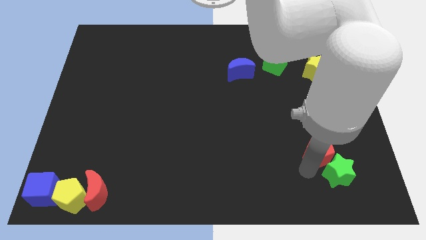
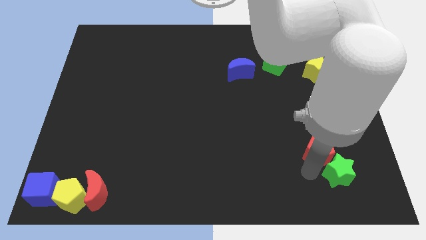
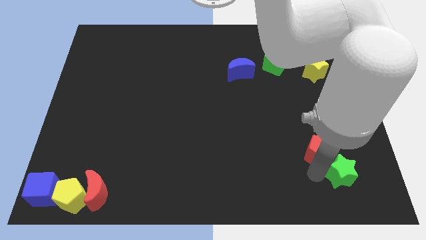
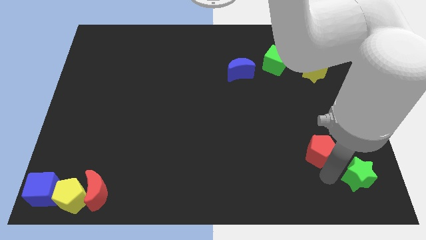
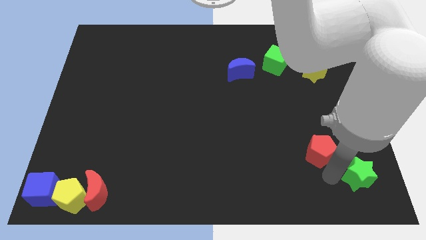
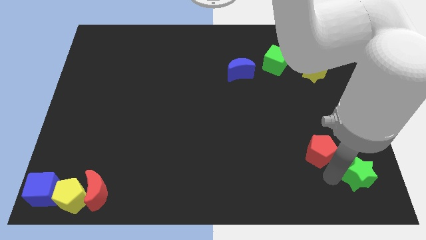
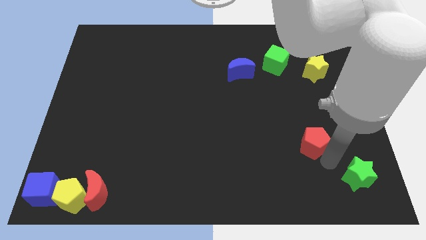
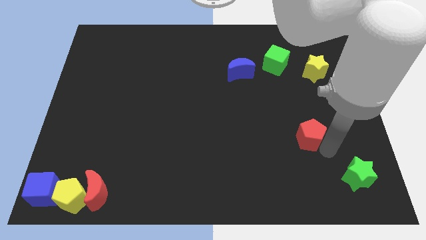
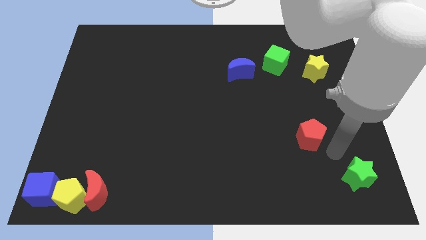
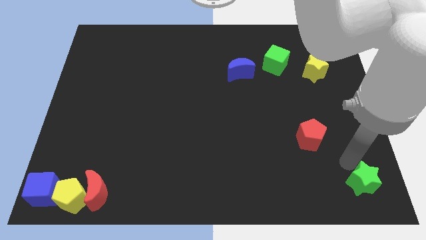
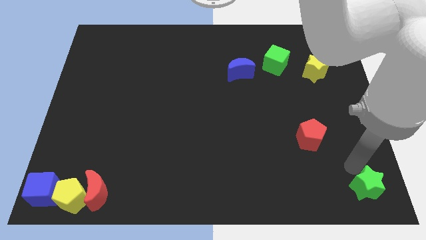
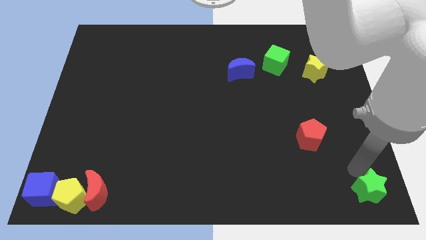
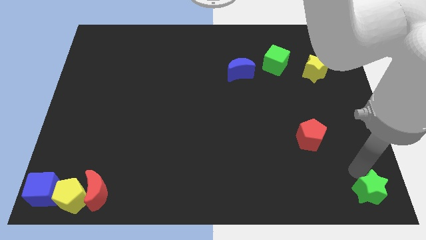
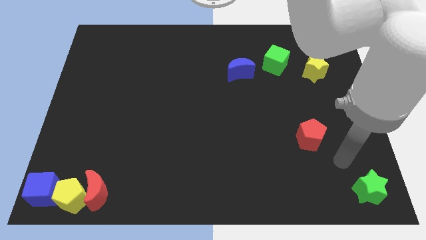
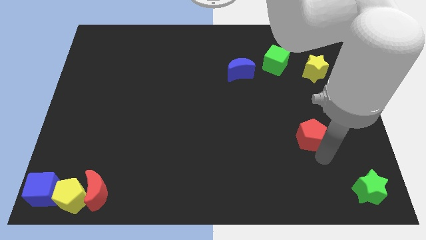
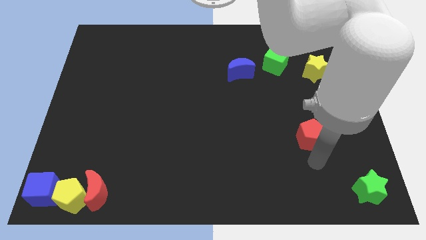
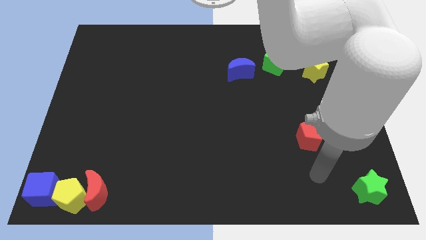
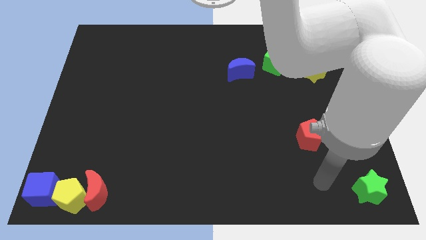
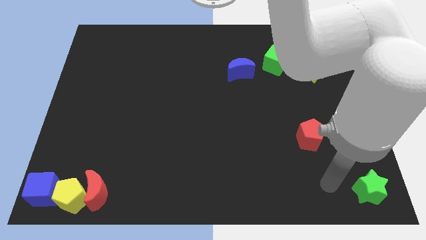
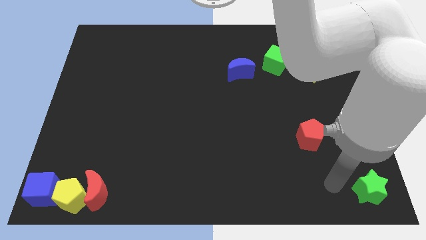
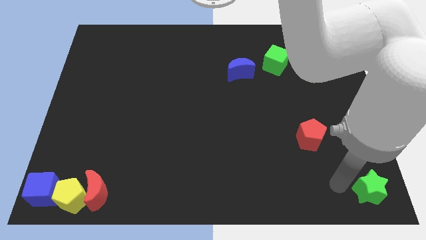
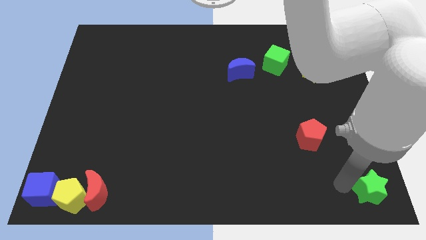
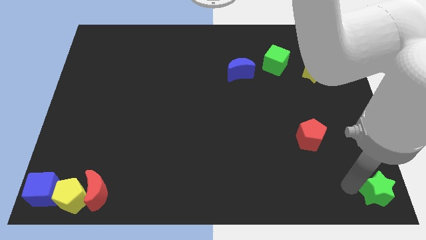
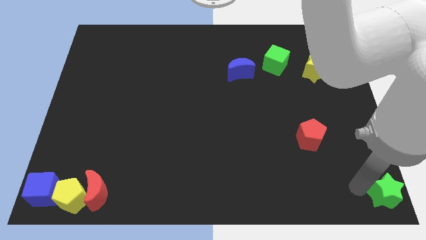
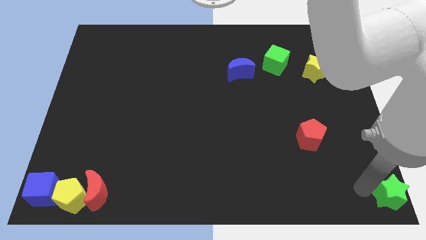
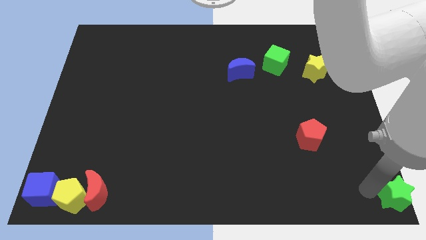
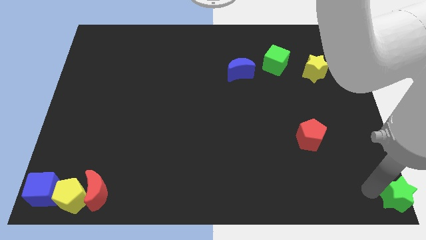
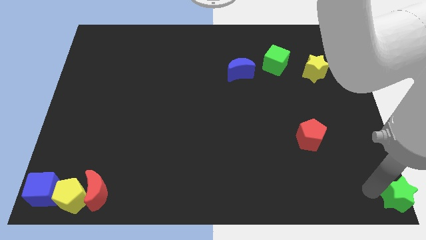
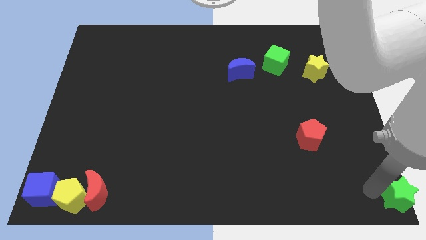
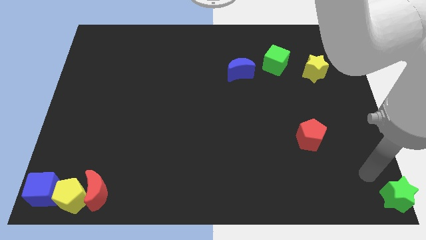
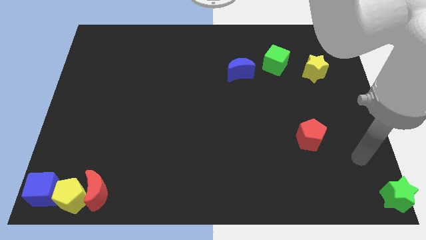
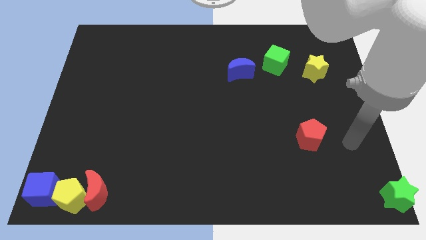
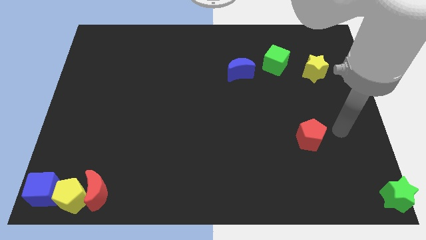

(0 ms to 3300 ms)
move green star to the bottom right corner

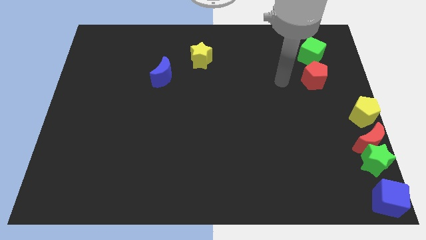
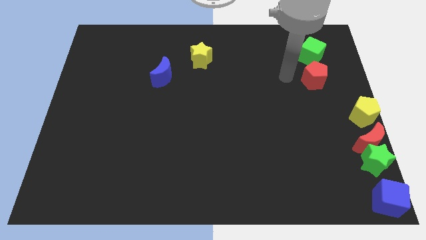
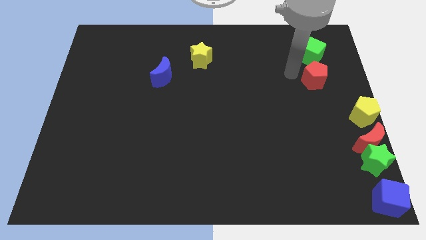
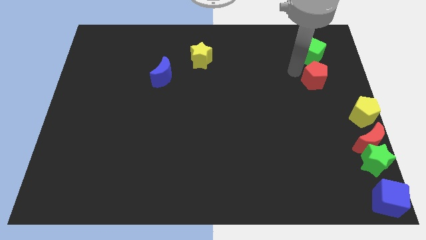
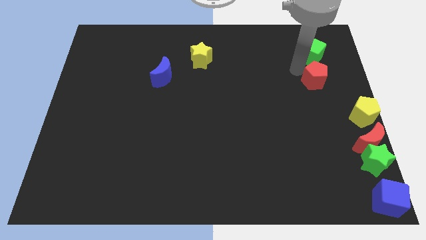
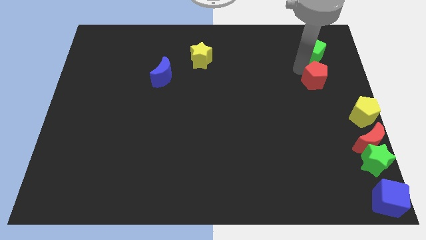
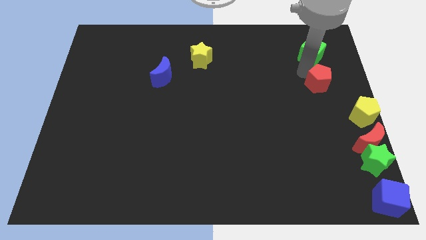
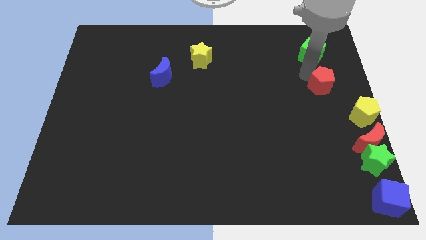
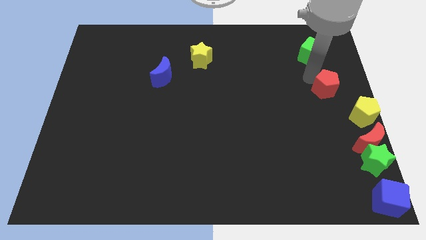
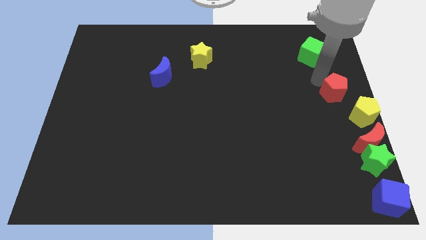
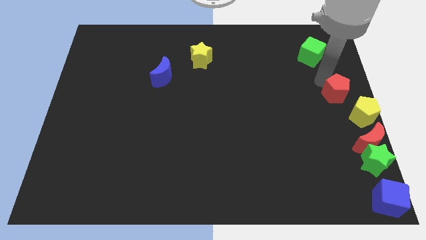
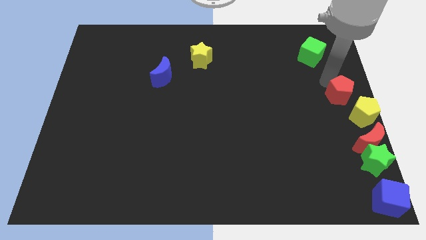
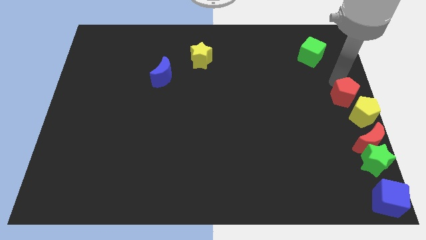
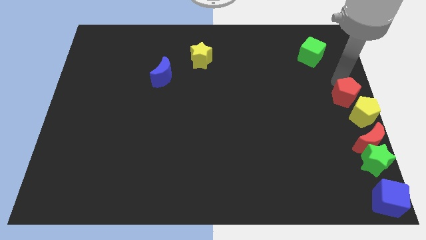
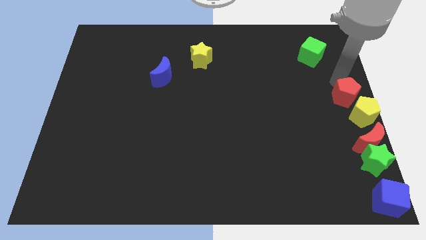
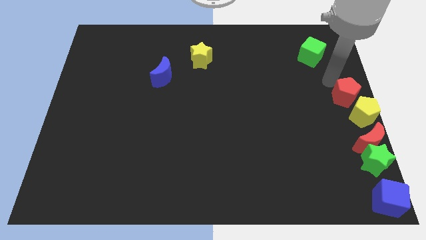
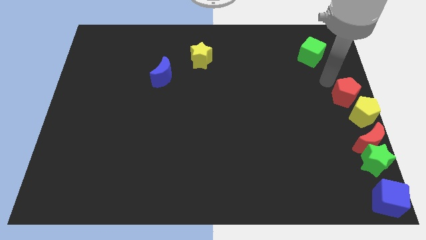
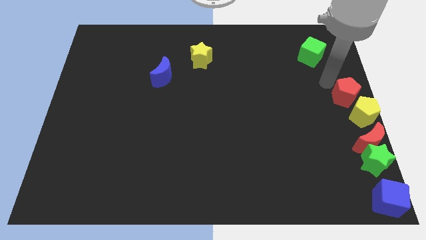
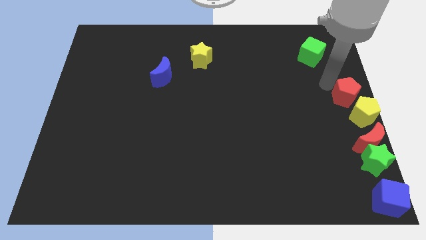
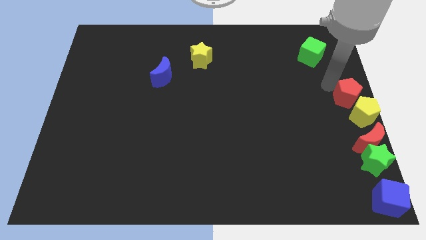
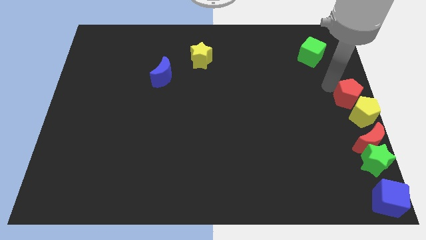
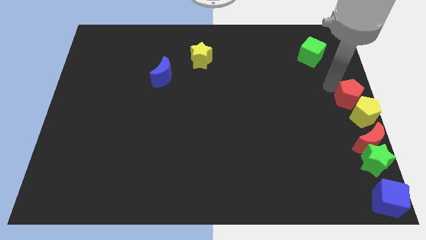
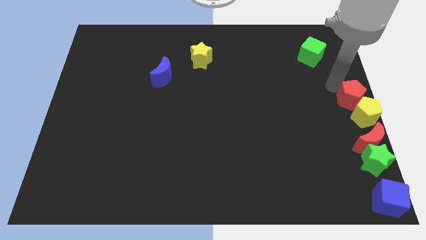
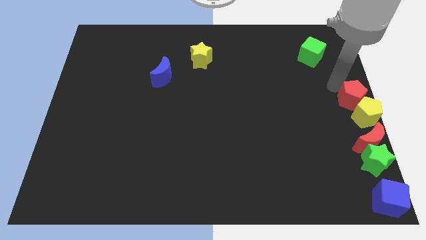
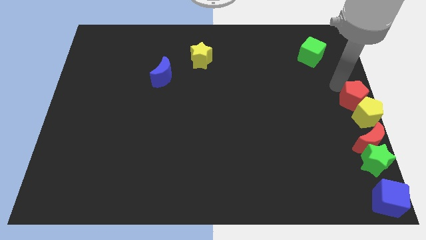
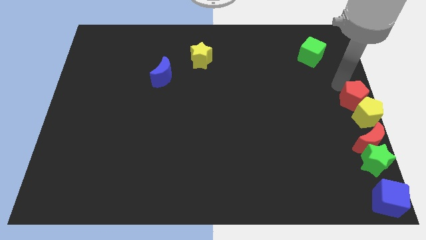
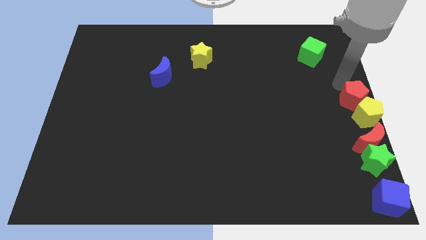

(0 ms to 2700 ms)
move the red pentagon towards the center right

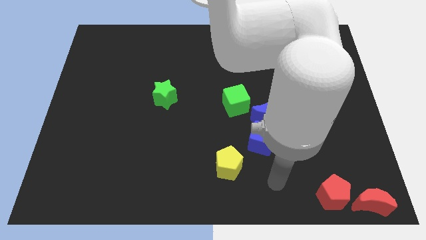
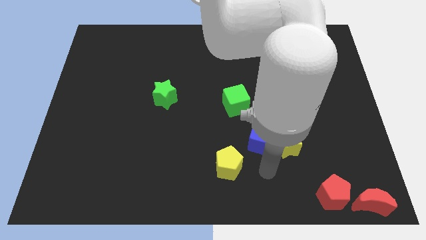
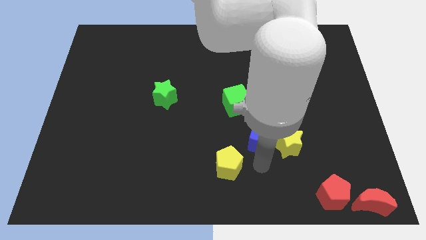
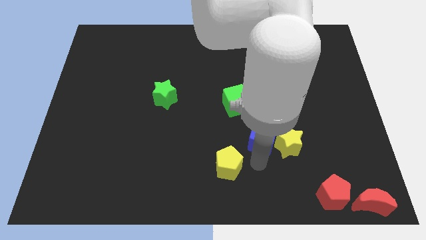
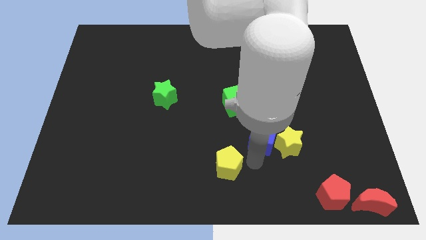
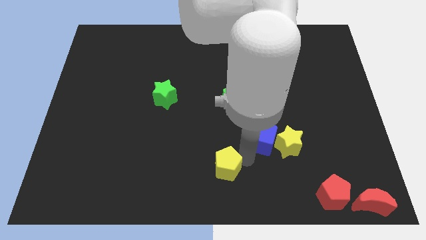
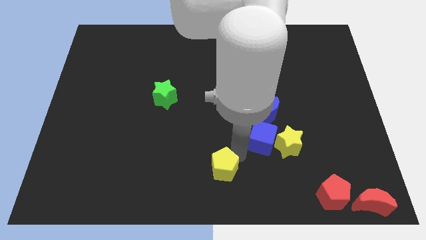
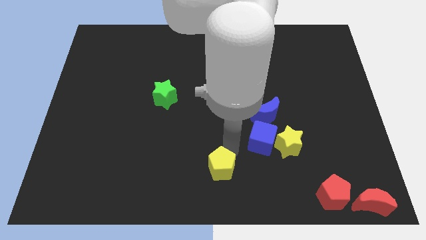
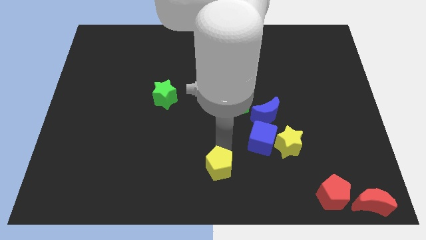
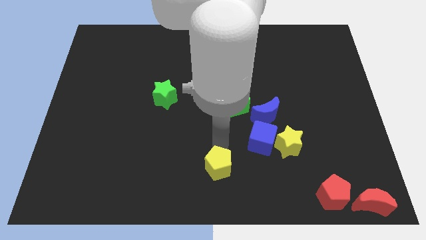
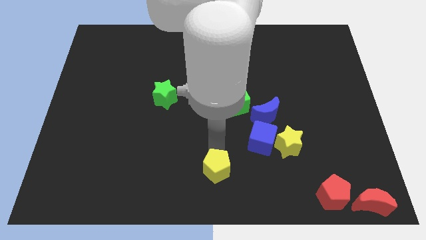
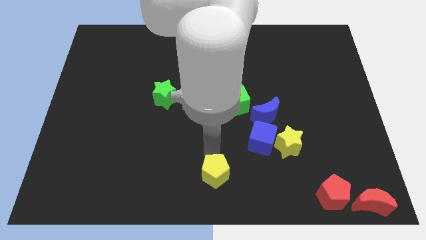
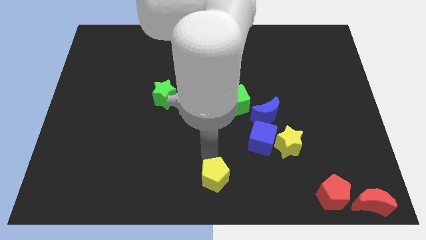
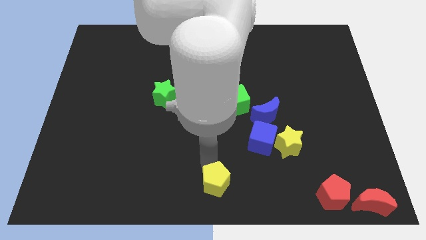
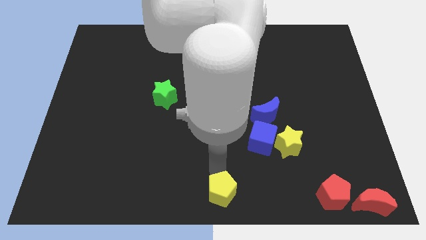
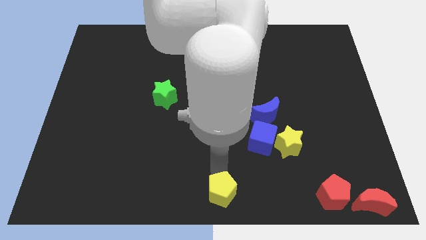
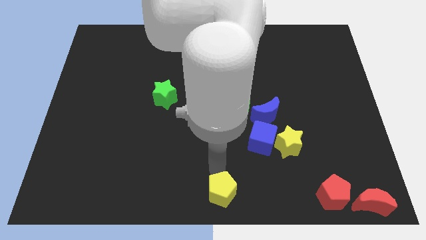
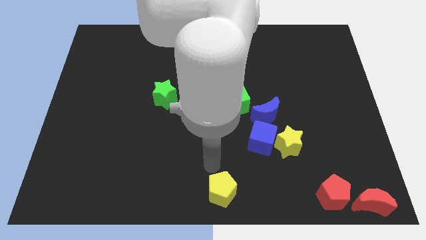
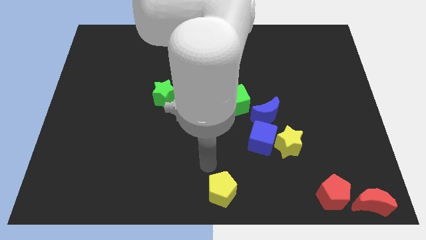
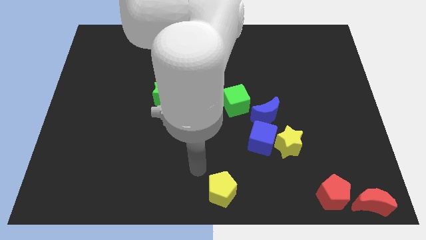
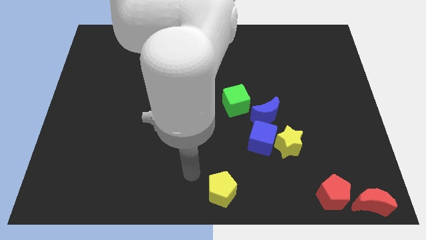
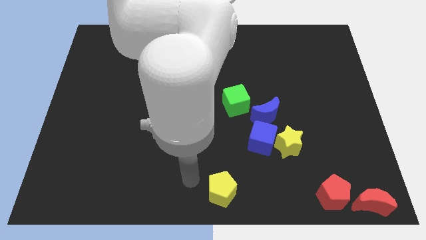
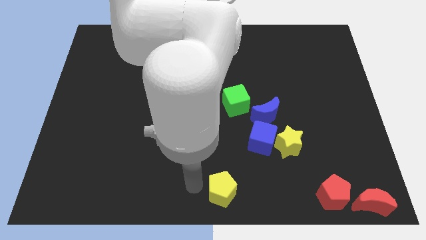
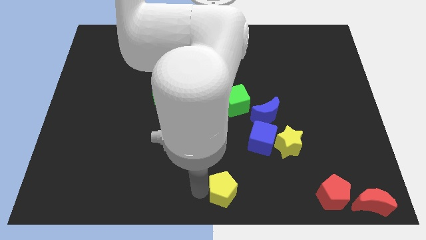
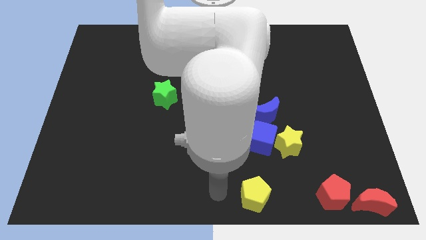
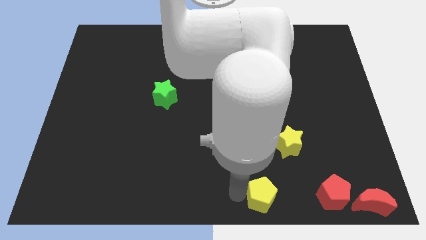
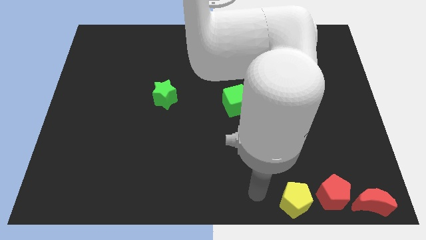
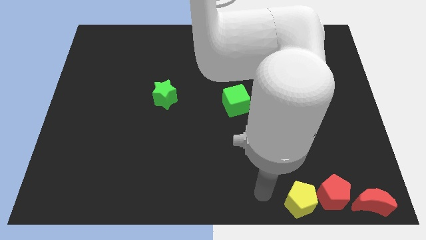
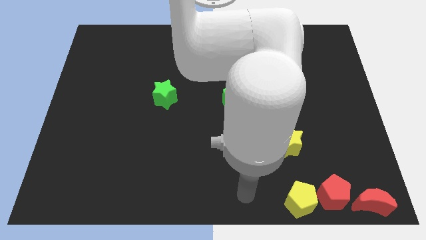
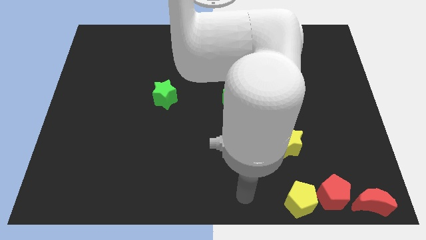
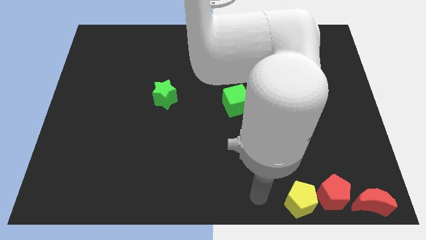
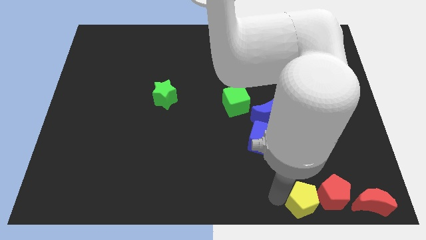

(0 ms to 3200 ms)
put the yellow pentagon parallel left to the red pentagon
